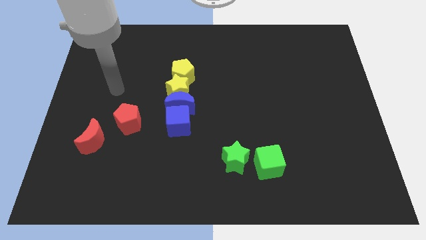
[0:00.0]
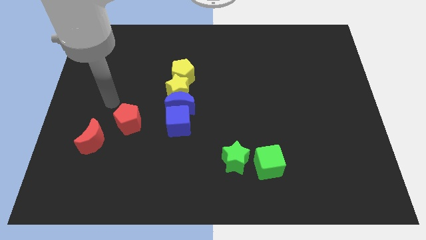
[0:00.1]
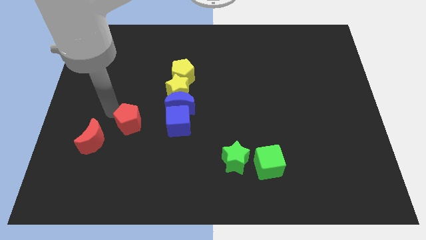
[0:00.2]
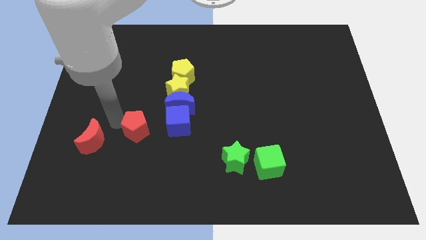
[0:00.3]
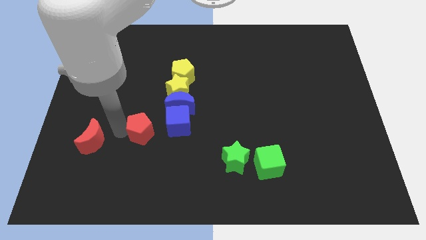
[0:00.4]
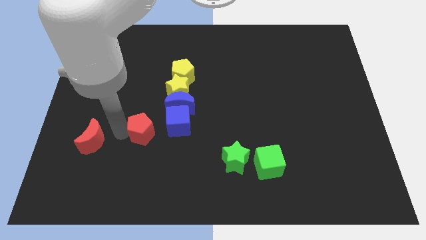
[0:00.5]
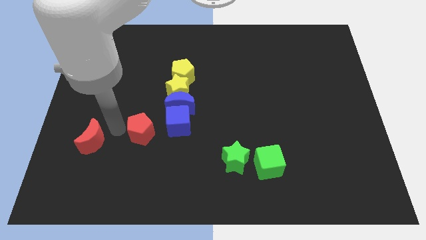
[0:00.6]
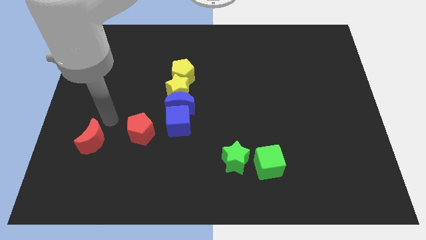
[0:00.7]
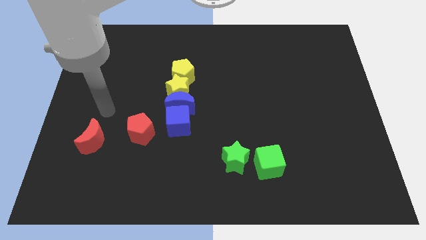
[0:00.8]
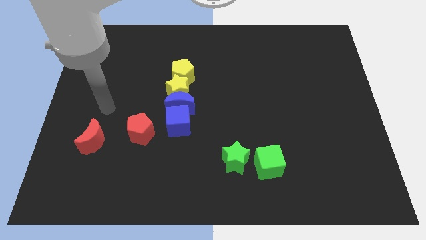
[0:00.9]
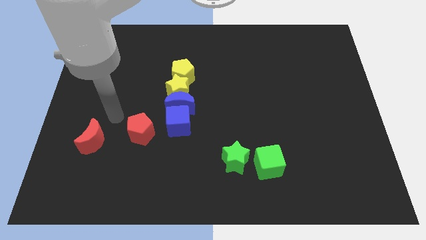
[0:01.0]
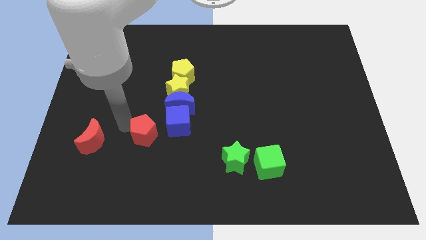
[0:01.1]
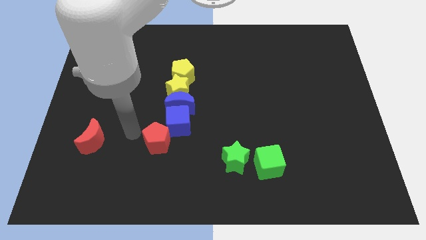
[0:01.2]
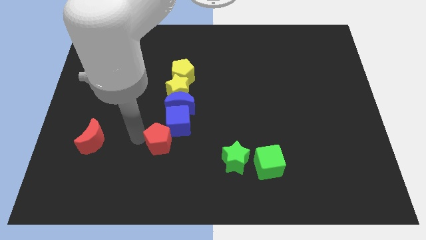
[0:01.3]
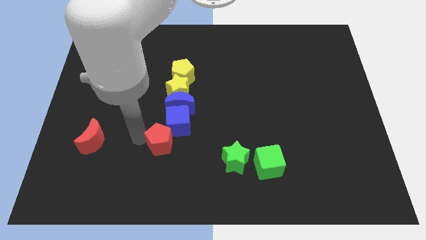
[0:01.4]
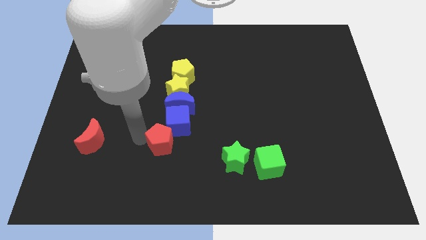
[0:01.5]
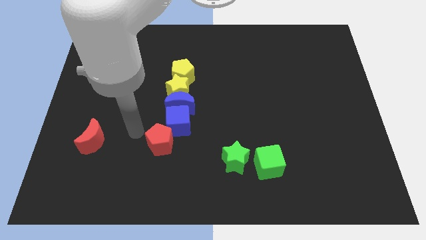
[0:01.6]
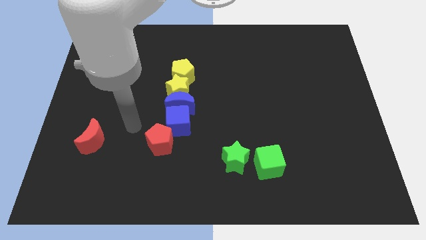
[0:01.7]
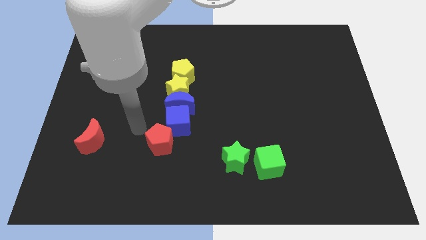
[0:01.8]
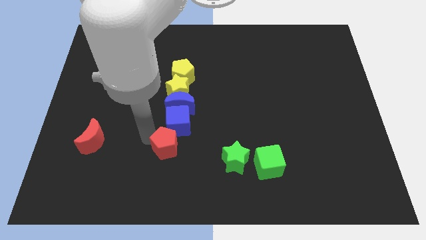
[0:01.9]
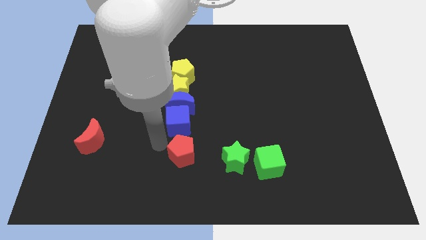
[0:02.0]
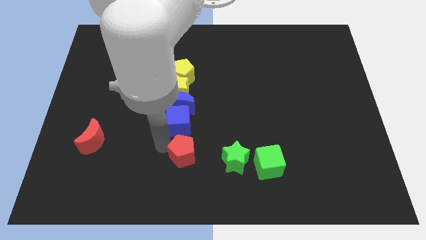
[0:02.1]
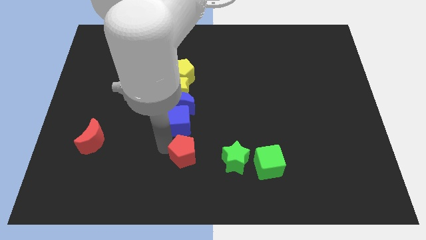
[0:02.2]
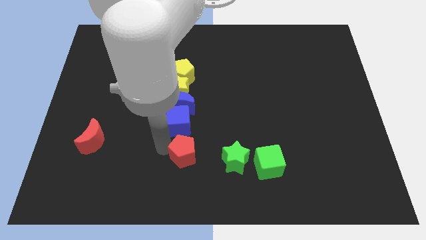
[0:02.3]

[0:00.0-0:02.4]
place red pentagon below blue cube

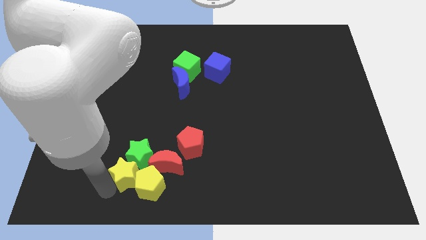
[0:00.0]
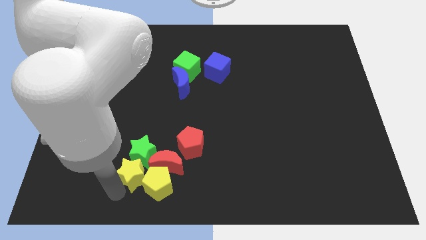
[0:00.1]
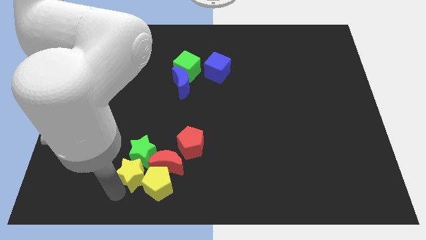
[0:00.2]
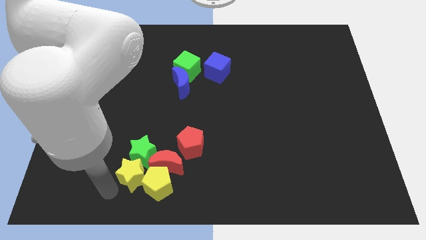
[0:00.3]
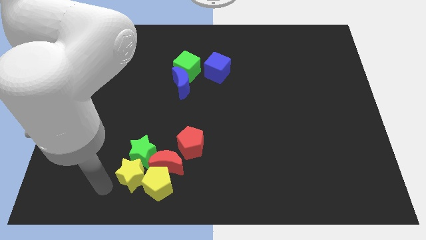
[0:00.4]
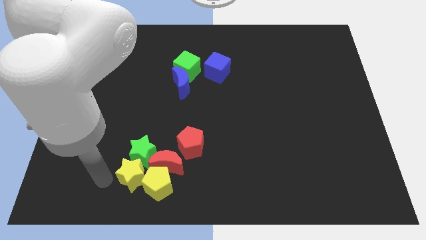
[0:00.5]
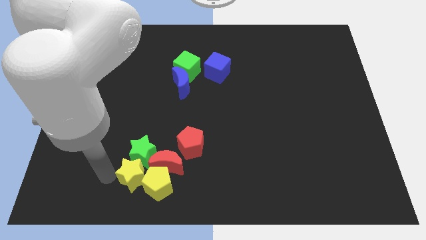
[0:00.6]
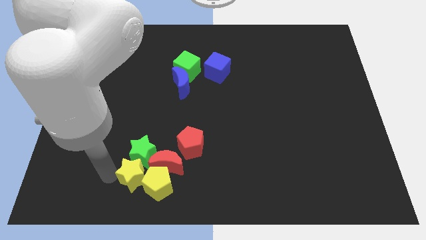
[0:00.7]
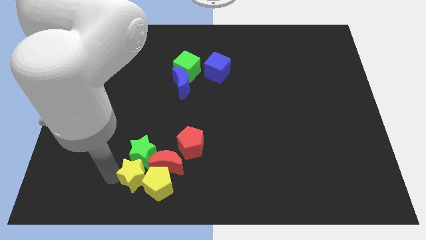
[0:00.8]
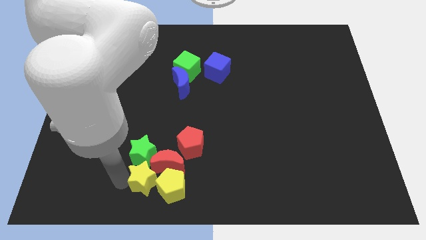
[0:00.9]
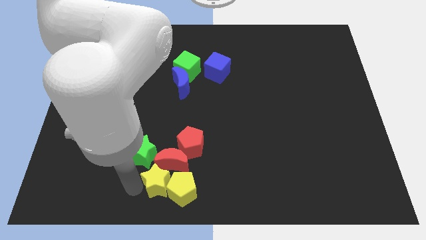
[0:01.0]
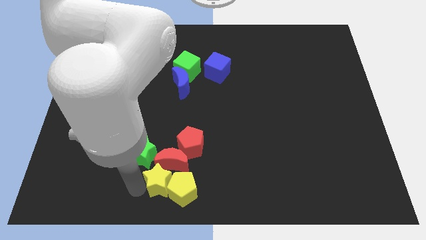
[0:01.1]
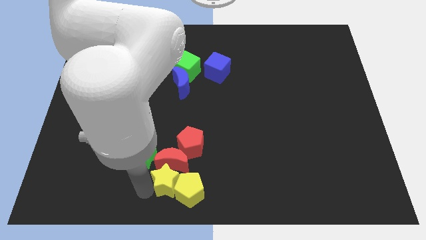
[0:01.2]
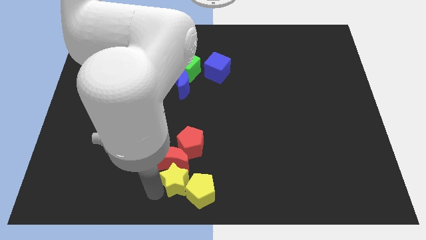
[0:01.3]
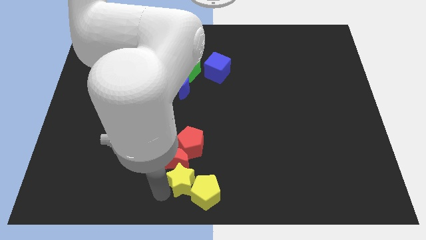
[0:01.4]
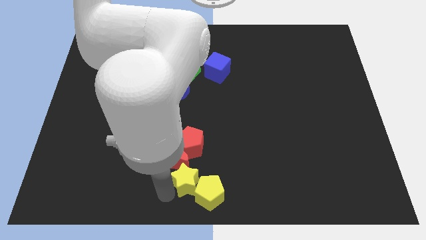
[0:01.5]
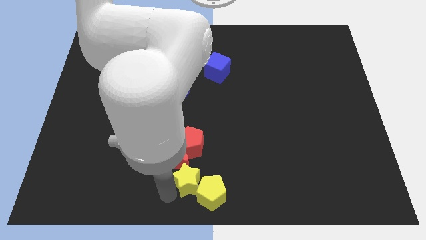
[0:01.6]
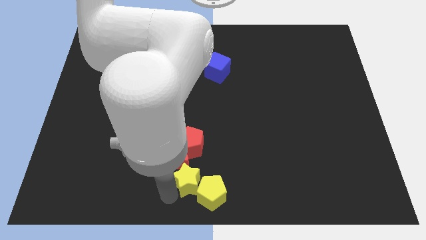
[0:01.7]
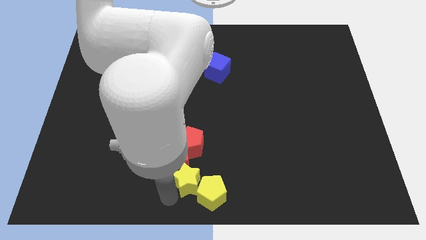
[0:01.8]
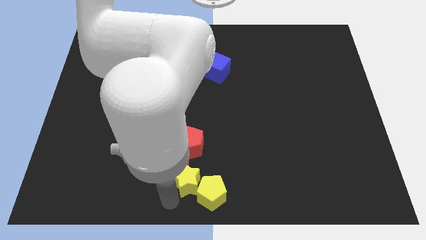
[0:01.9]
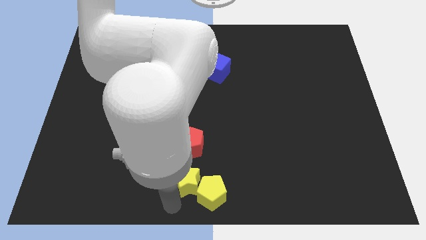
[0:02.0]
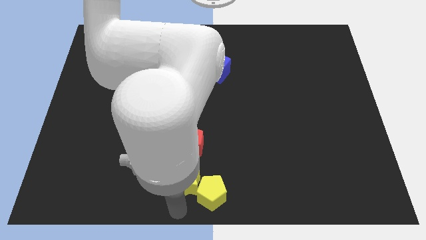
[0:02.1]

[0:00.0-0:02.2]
move the yellow blocks towards the bottom center of the board

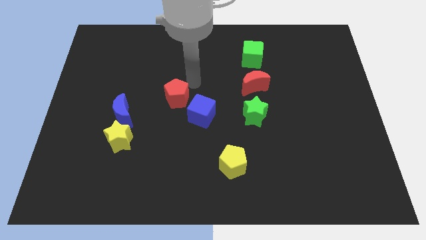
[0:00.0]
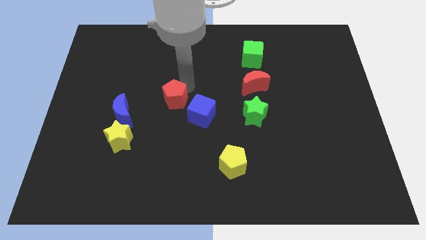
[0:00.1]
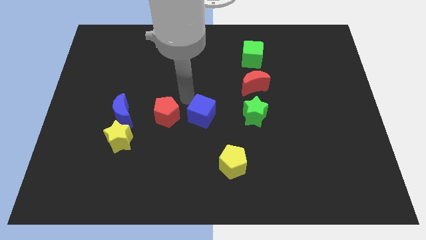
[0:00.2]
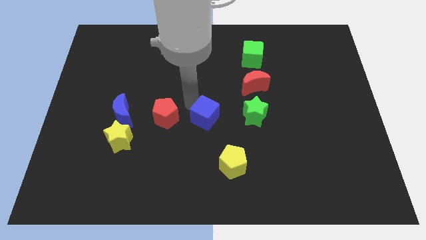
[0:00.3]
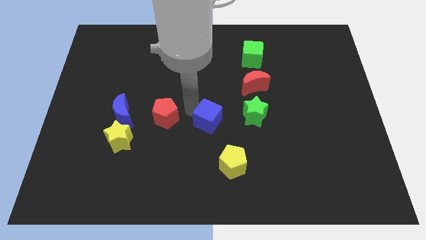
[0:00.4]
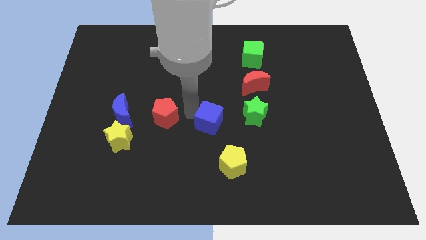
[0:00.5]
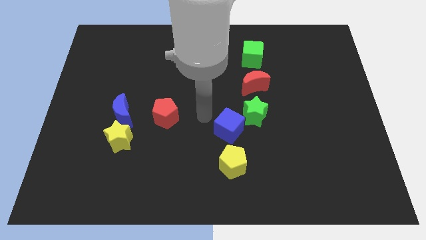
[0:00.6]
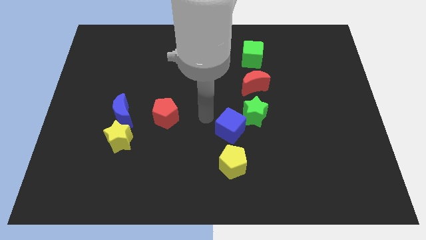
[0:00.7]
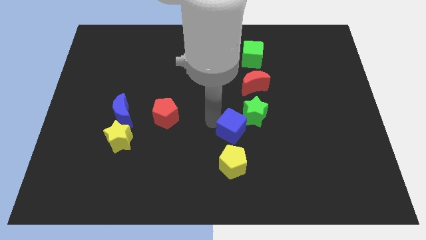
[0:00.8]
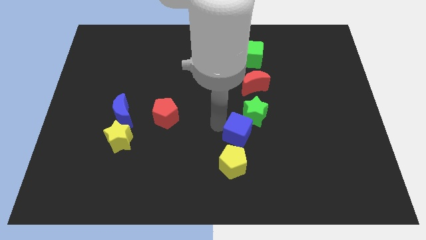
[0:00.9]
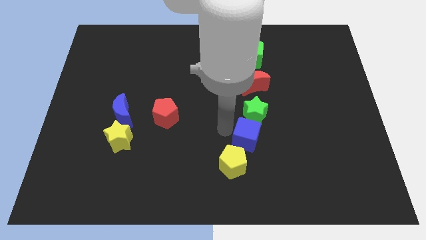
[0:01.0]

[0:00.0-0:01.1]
separate the red pentagon and blue cube

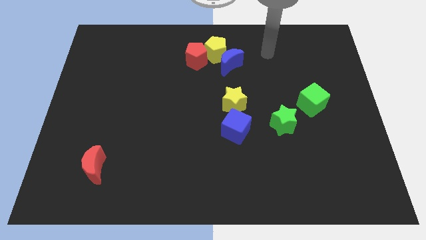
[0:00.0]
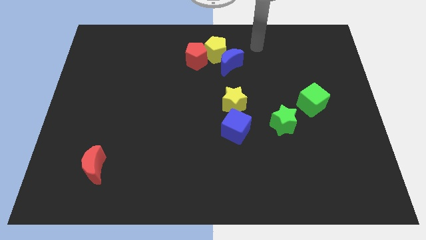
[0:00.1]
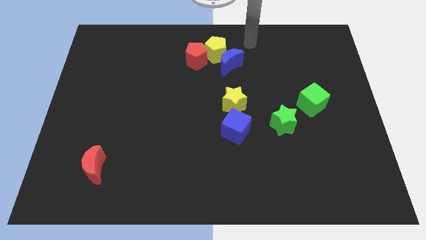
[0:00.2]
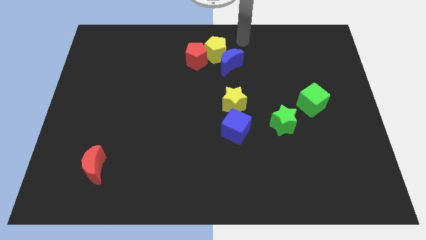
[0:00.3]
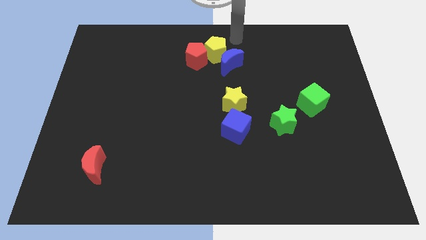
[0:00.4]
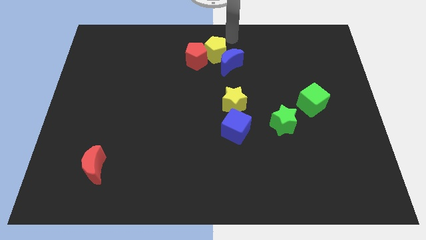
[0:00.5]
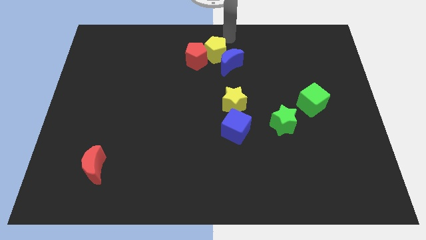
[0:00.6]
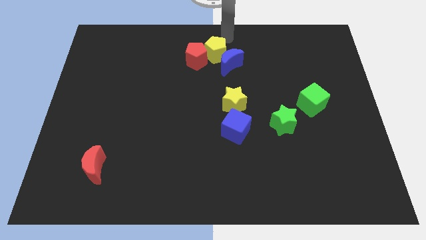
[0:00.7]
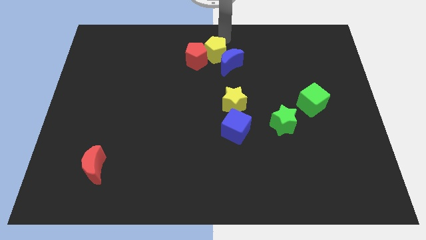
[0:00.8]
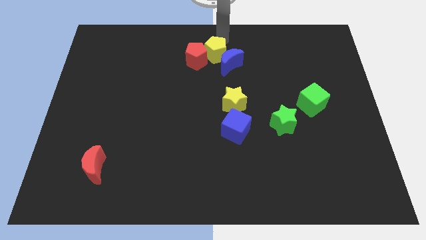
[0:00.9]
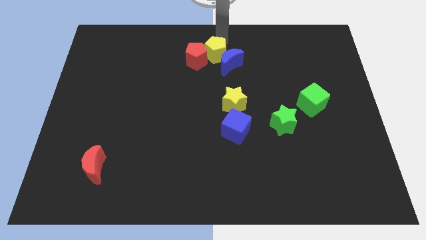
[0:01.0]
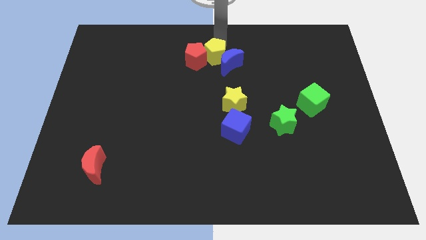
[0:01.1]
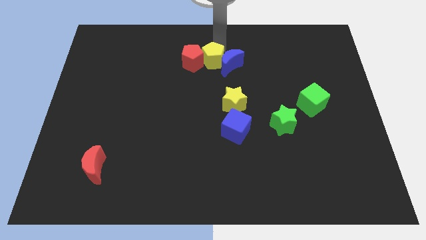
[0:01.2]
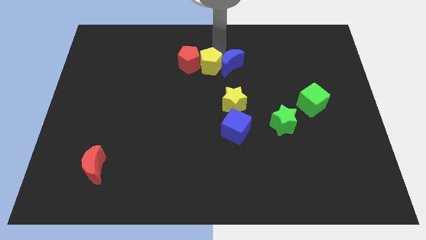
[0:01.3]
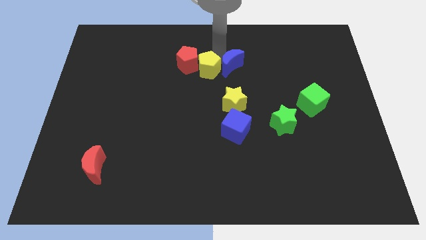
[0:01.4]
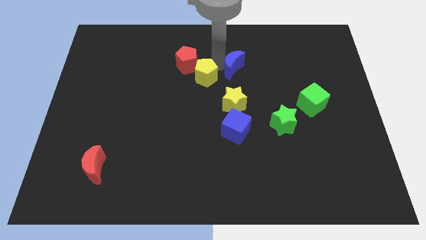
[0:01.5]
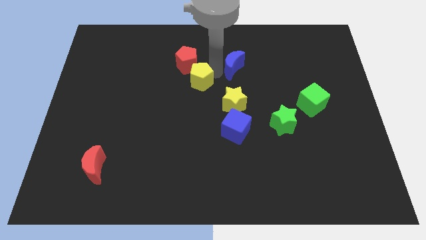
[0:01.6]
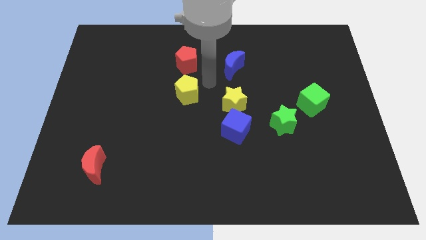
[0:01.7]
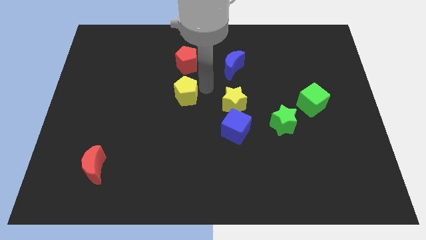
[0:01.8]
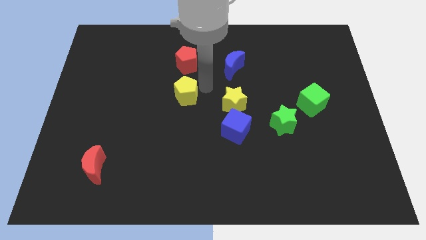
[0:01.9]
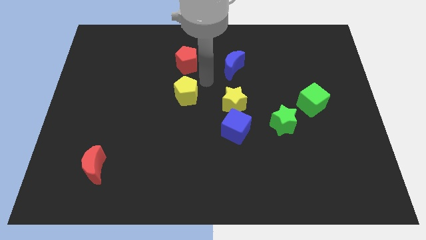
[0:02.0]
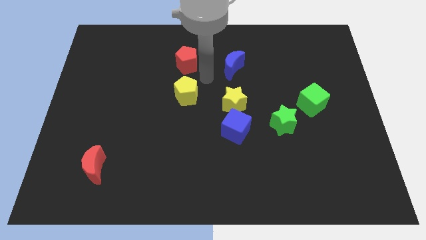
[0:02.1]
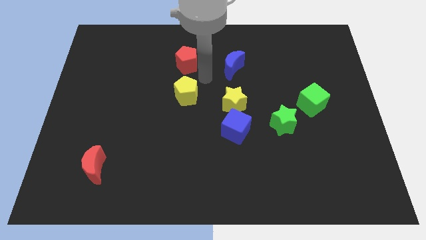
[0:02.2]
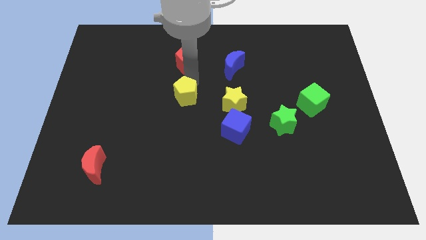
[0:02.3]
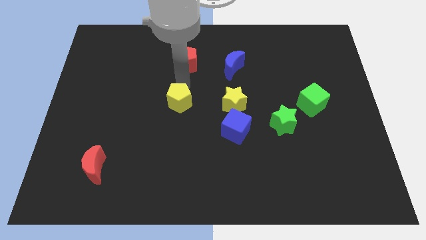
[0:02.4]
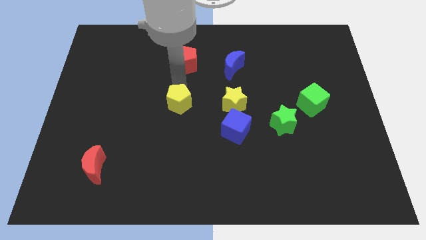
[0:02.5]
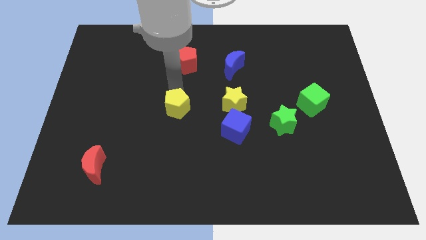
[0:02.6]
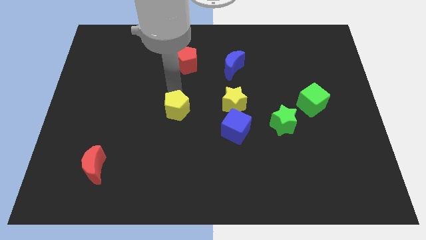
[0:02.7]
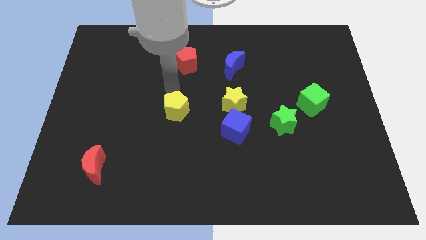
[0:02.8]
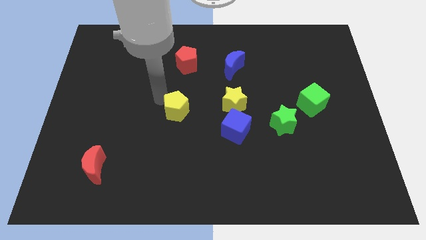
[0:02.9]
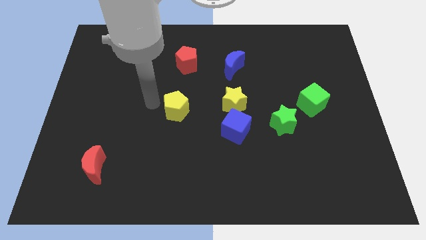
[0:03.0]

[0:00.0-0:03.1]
separate yellow pentagon from the red pentagon

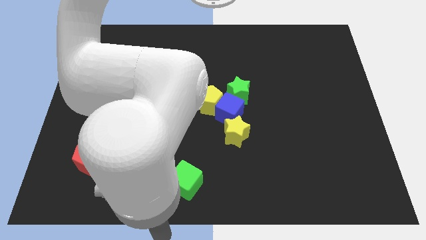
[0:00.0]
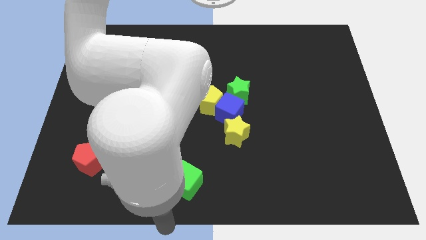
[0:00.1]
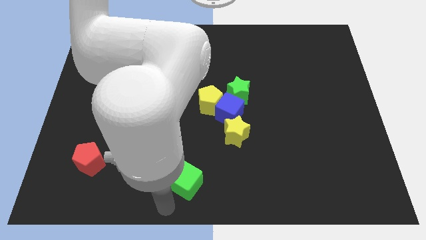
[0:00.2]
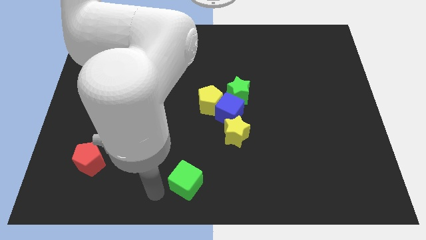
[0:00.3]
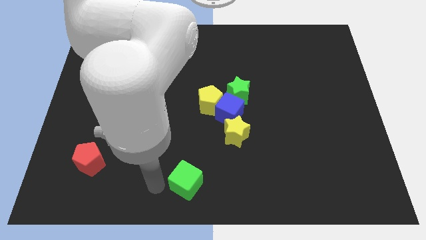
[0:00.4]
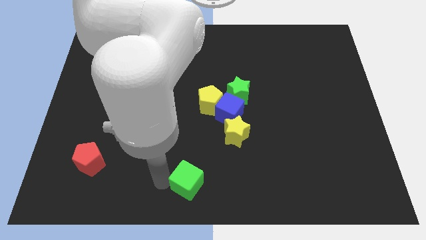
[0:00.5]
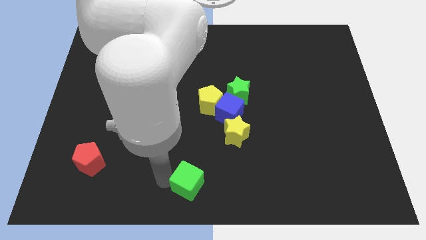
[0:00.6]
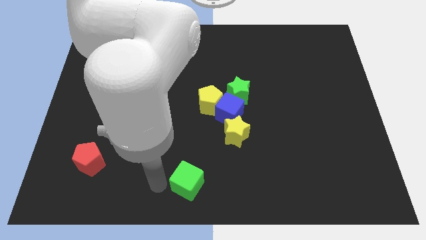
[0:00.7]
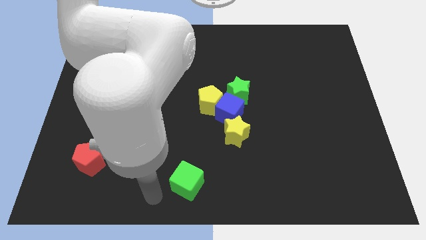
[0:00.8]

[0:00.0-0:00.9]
move arm to the left of green cube
